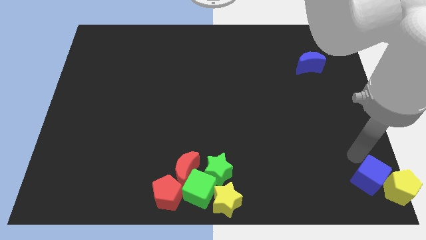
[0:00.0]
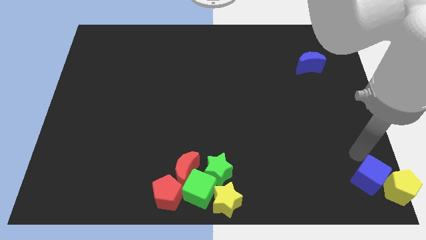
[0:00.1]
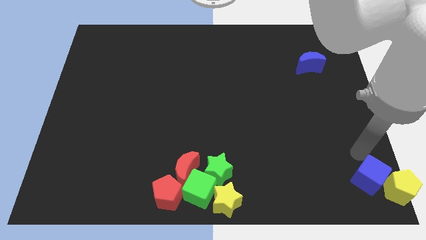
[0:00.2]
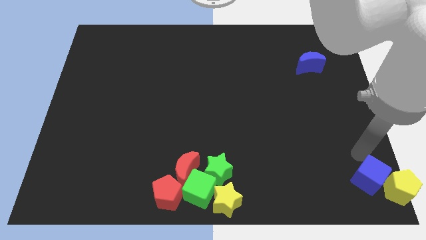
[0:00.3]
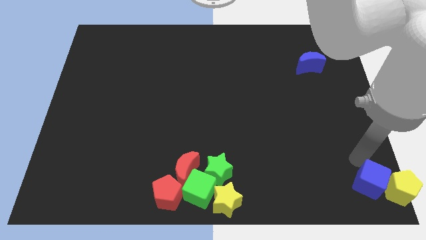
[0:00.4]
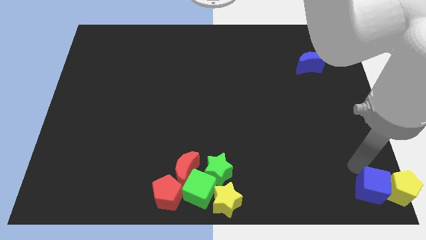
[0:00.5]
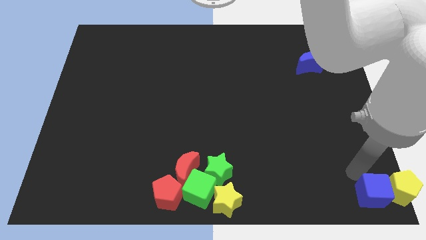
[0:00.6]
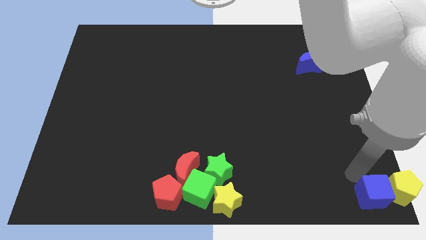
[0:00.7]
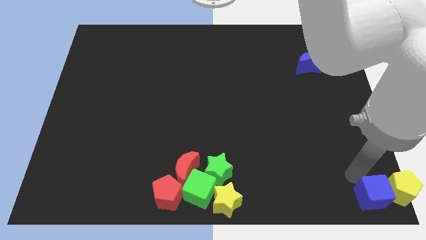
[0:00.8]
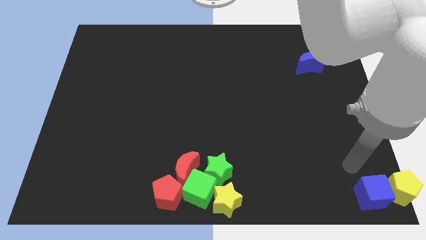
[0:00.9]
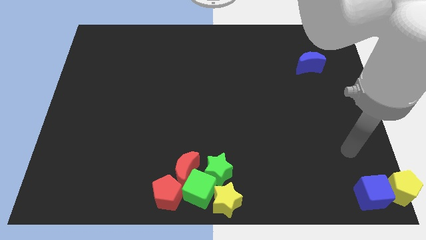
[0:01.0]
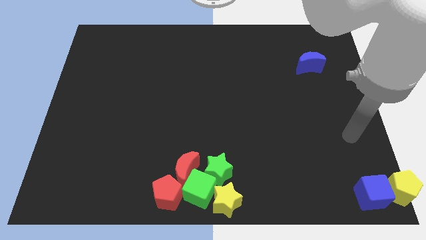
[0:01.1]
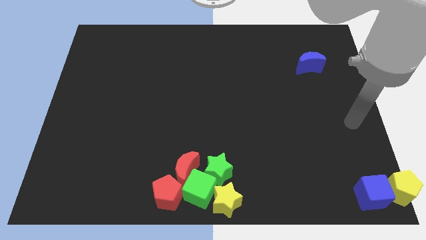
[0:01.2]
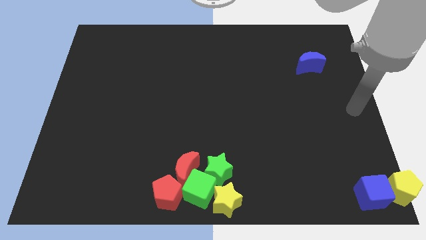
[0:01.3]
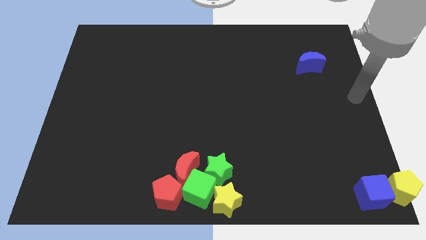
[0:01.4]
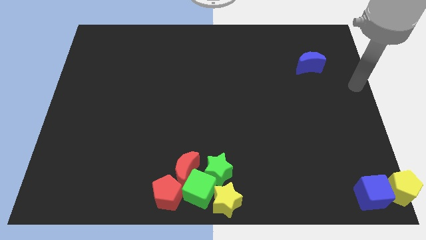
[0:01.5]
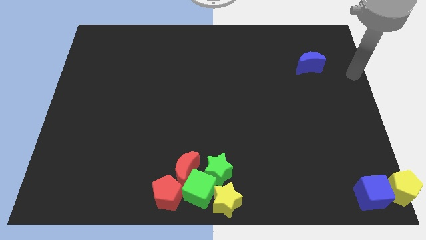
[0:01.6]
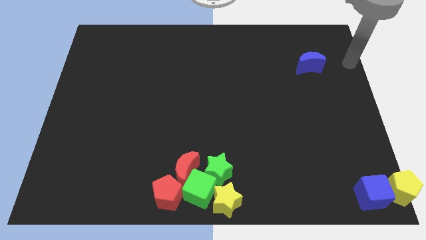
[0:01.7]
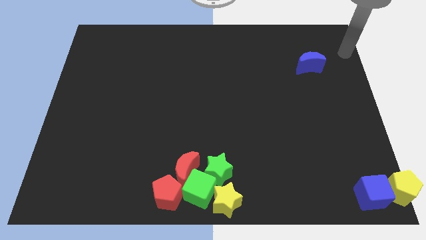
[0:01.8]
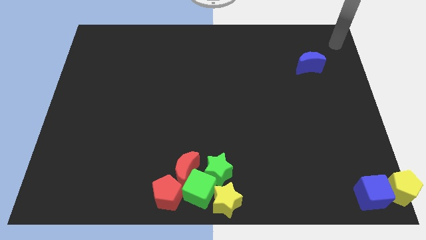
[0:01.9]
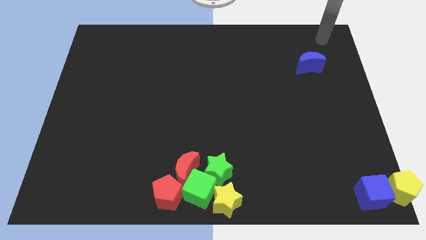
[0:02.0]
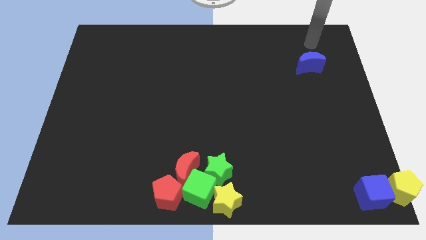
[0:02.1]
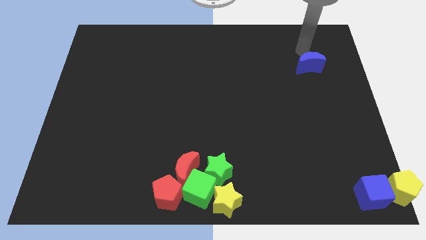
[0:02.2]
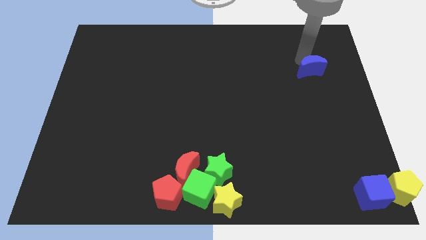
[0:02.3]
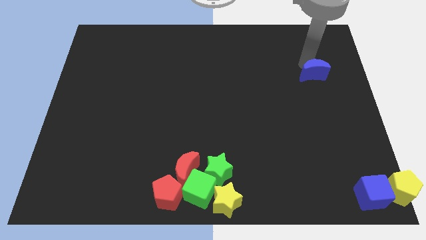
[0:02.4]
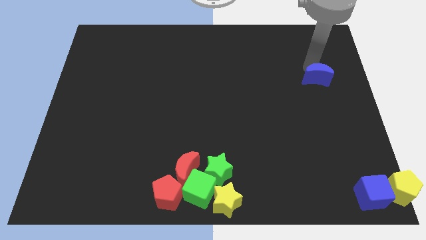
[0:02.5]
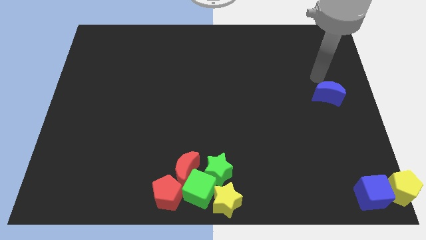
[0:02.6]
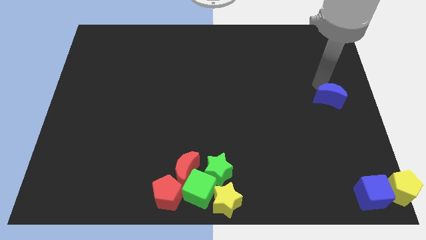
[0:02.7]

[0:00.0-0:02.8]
push blue crescent slightly towards the bottom

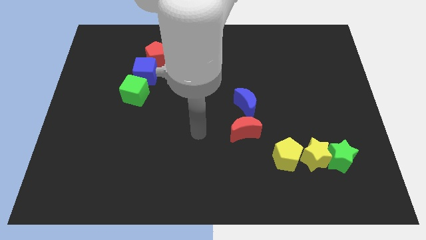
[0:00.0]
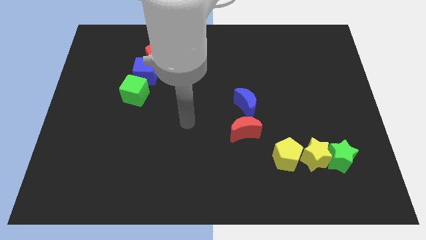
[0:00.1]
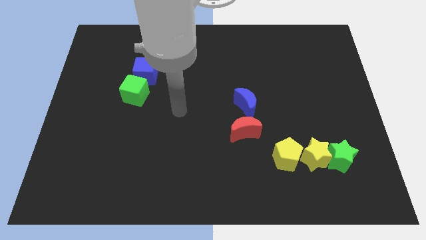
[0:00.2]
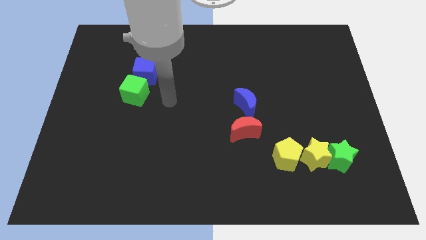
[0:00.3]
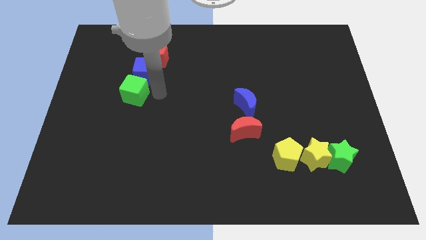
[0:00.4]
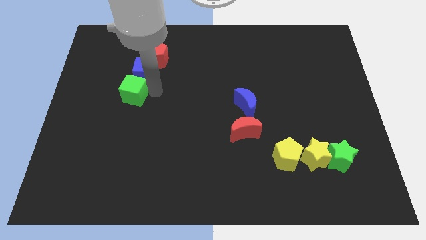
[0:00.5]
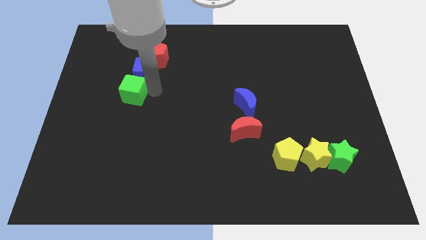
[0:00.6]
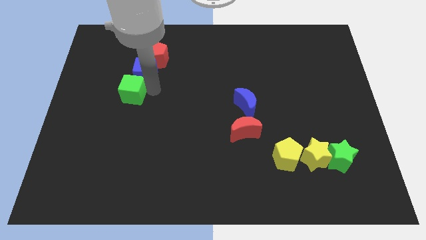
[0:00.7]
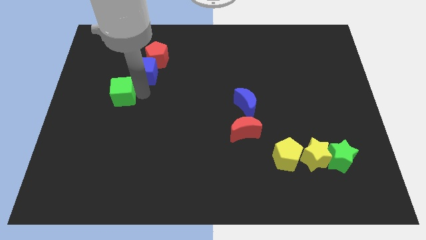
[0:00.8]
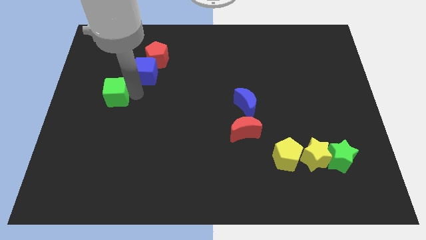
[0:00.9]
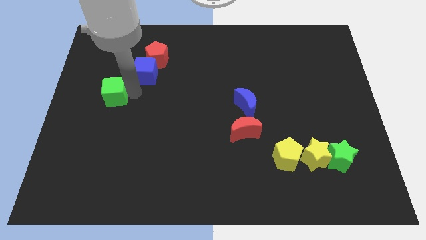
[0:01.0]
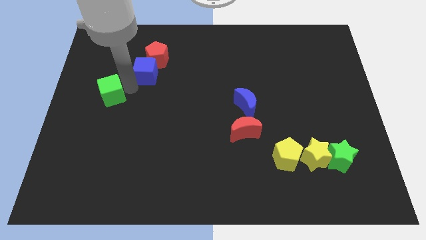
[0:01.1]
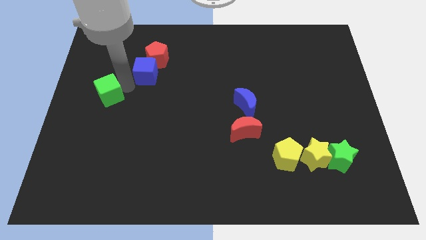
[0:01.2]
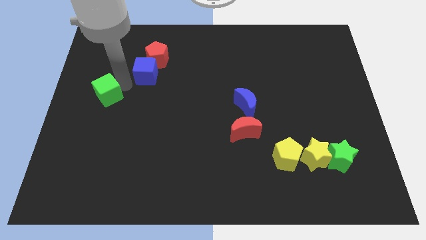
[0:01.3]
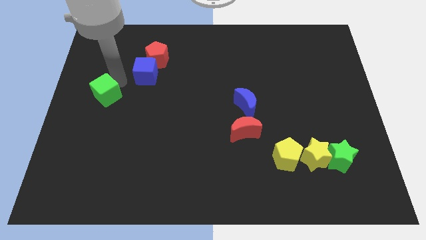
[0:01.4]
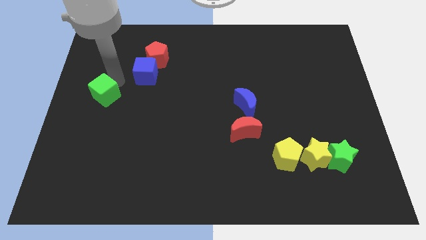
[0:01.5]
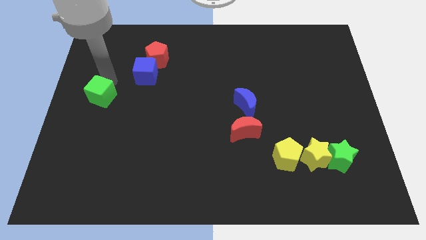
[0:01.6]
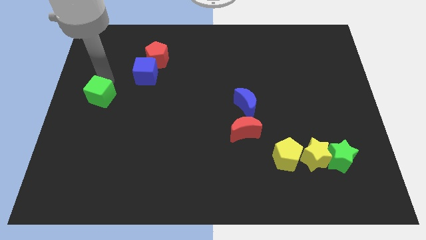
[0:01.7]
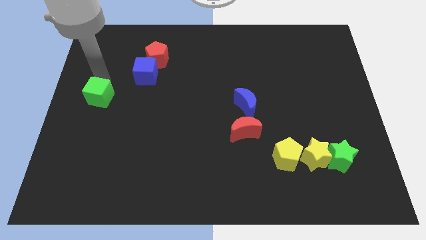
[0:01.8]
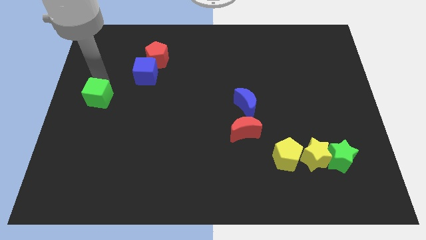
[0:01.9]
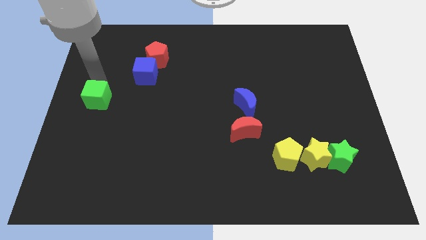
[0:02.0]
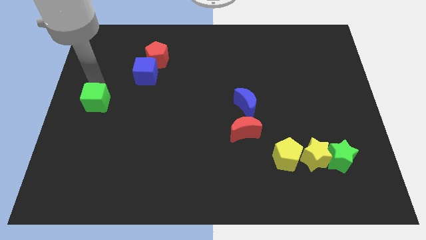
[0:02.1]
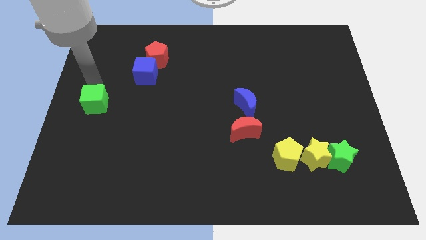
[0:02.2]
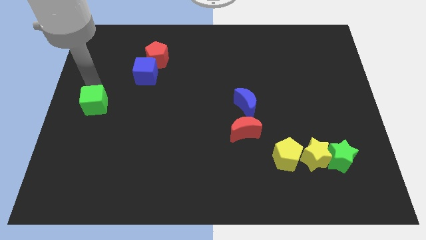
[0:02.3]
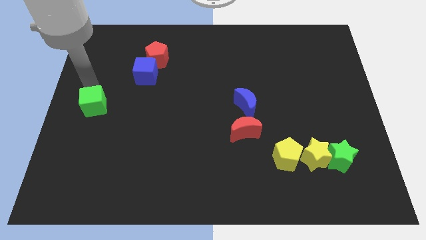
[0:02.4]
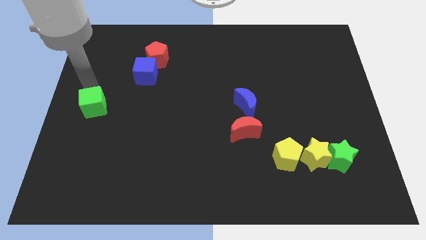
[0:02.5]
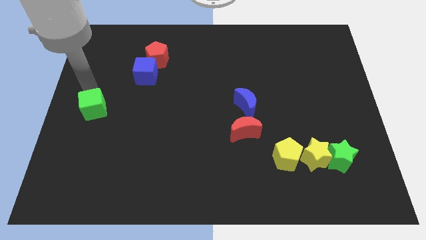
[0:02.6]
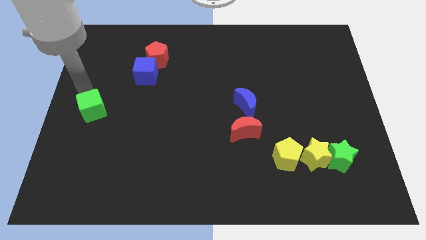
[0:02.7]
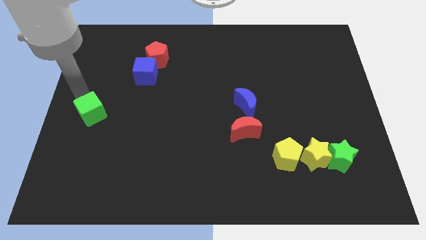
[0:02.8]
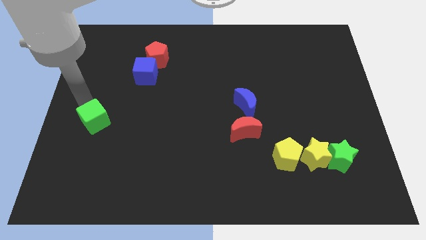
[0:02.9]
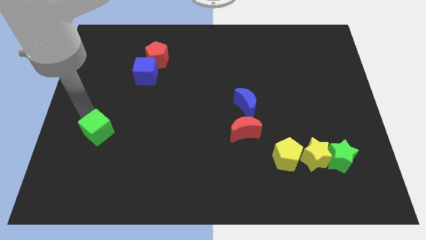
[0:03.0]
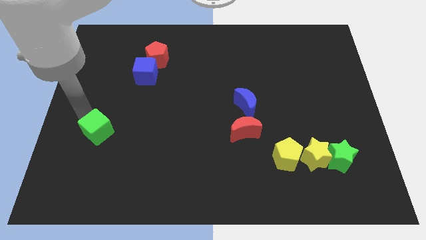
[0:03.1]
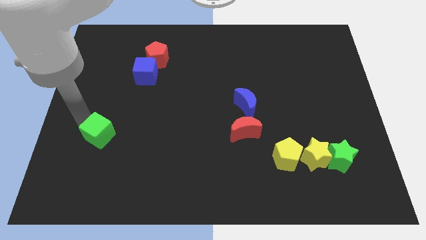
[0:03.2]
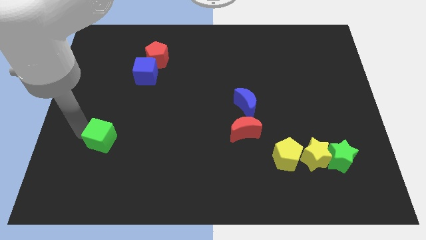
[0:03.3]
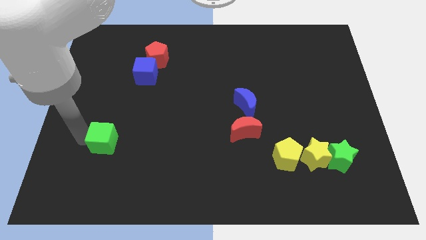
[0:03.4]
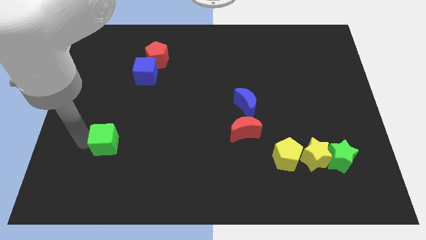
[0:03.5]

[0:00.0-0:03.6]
separate green cube from blue cube

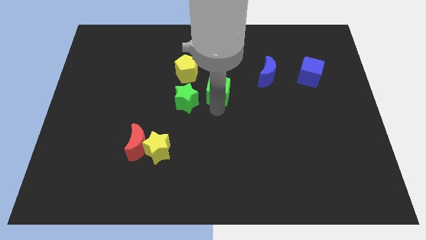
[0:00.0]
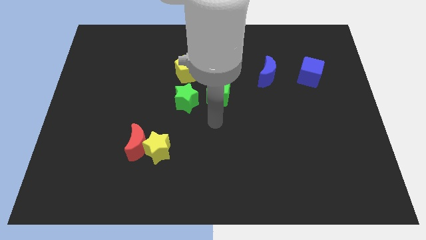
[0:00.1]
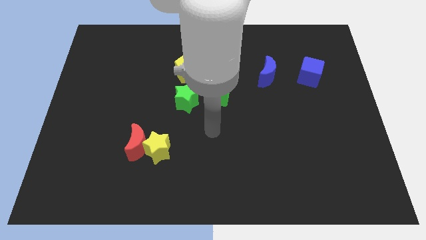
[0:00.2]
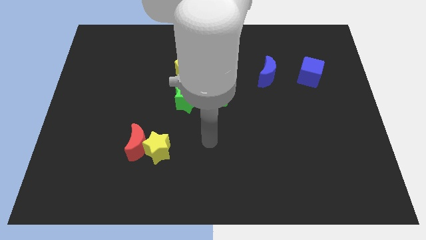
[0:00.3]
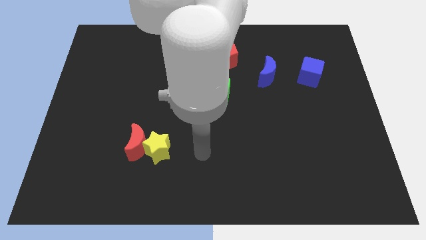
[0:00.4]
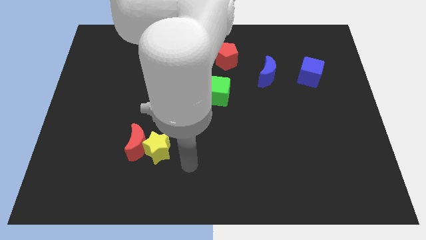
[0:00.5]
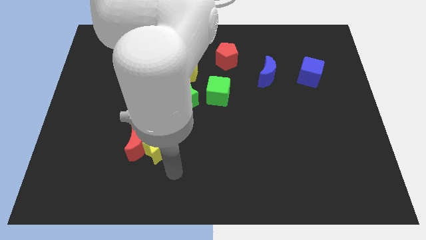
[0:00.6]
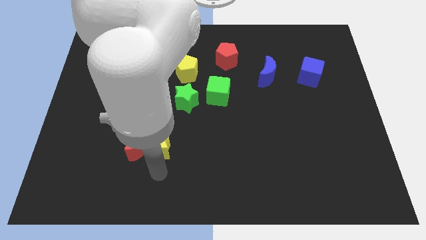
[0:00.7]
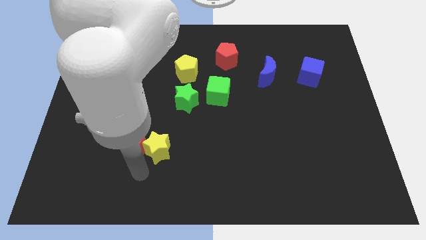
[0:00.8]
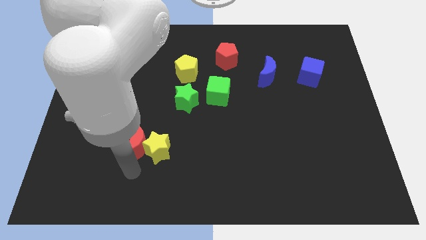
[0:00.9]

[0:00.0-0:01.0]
move the arm to the bottom of the yellow star

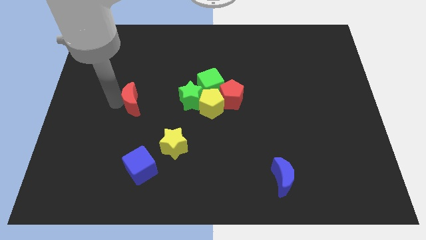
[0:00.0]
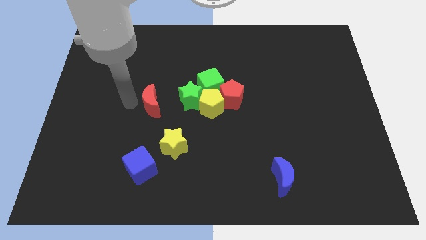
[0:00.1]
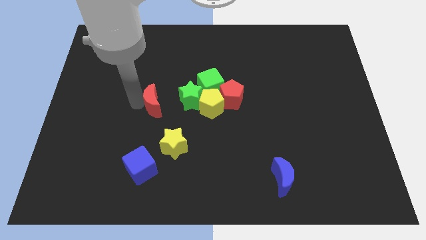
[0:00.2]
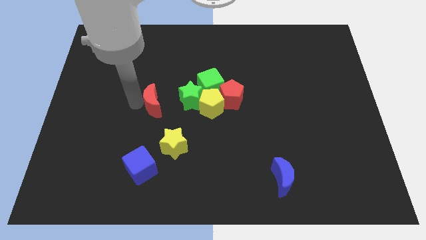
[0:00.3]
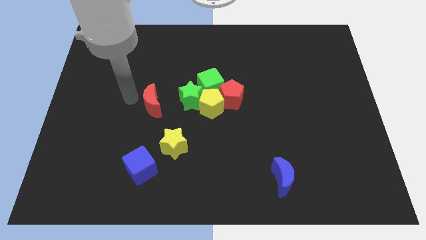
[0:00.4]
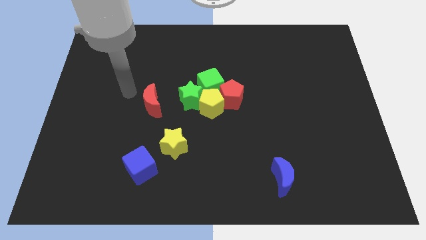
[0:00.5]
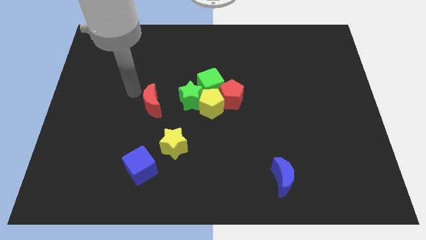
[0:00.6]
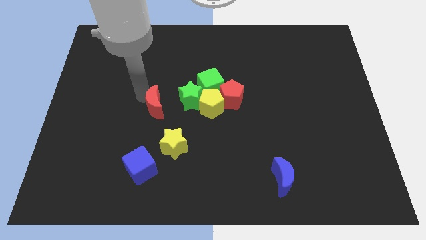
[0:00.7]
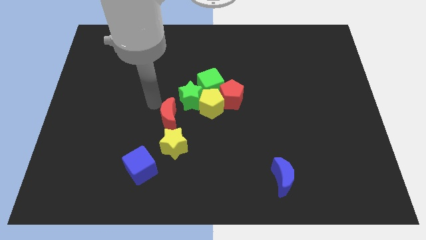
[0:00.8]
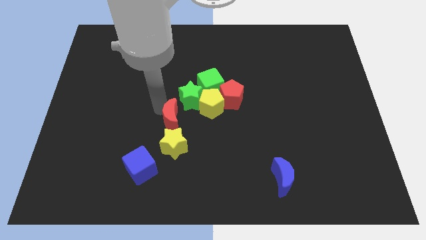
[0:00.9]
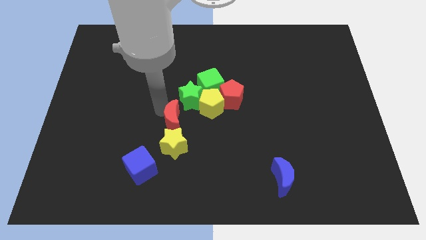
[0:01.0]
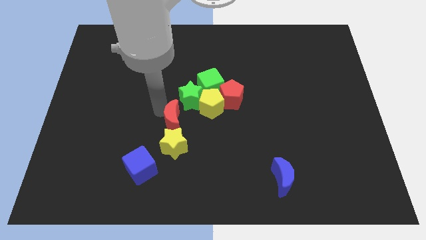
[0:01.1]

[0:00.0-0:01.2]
push the red crescent to the top of the yellow star

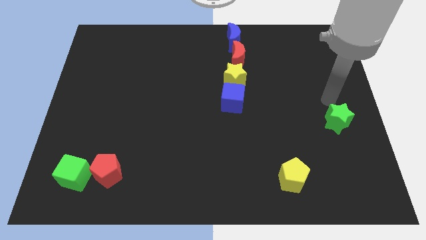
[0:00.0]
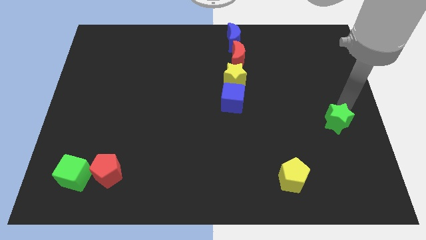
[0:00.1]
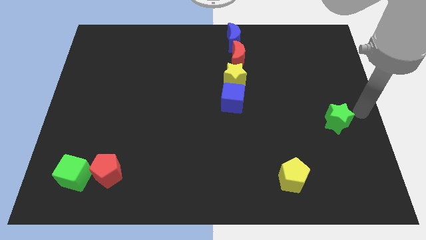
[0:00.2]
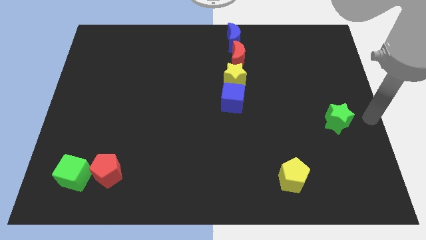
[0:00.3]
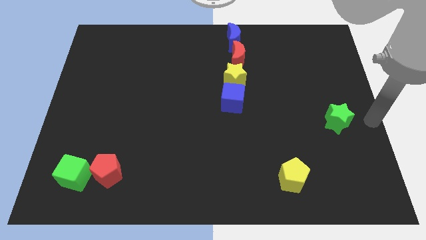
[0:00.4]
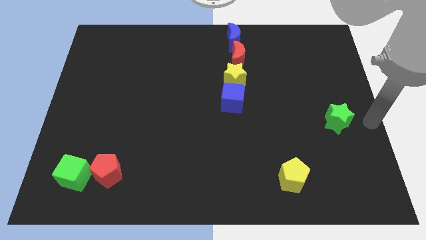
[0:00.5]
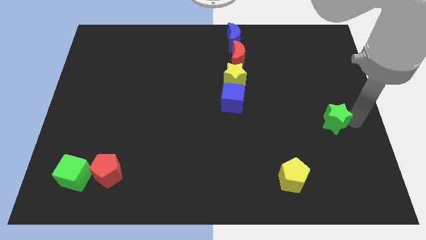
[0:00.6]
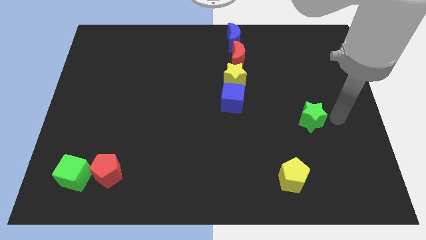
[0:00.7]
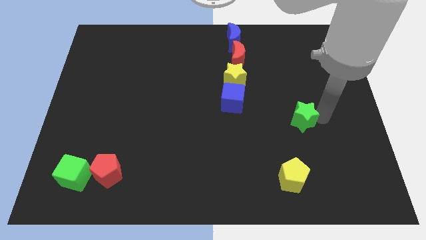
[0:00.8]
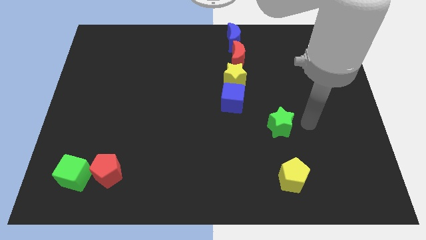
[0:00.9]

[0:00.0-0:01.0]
place the green star above the yellow pentagon
